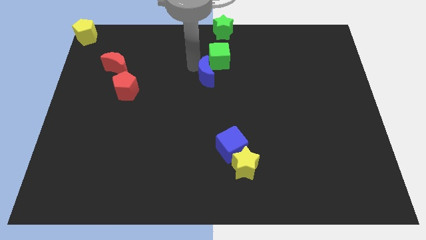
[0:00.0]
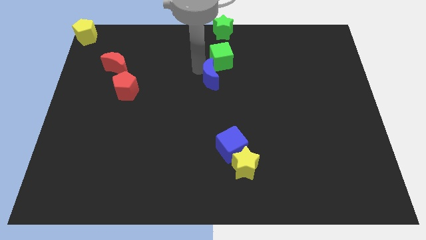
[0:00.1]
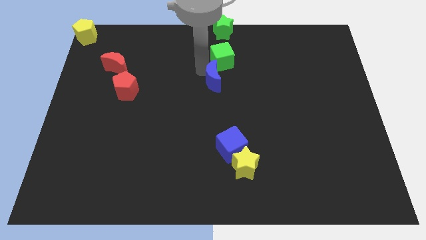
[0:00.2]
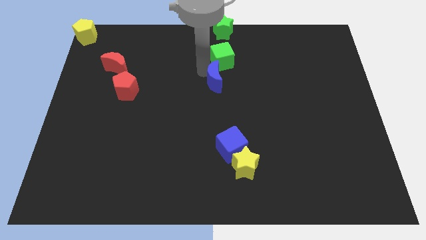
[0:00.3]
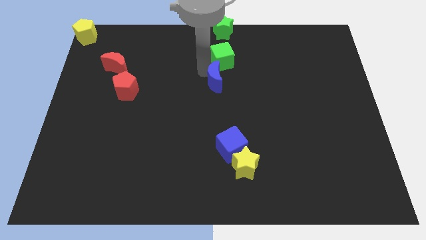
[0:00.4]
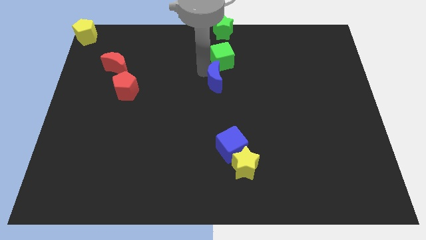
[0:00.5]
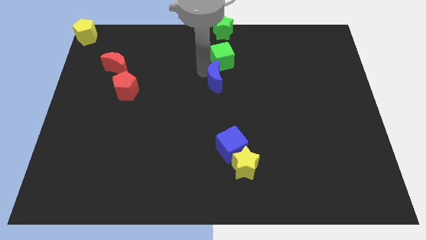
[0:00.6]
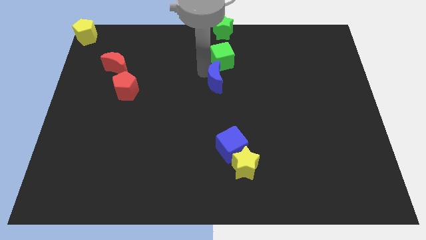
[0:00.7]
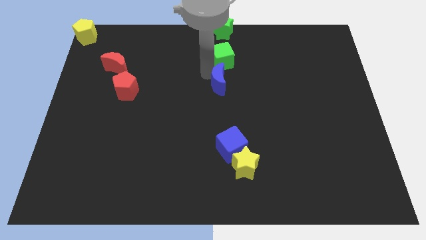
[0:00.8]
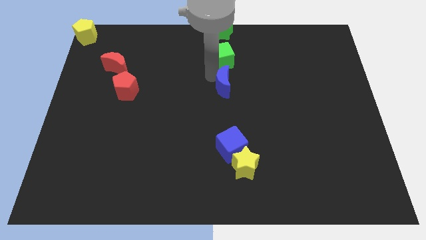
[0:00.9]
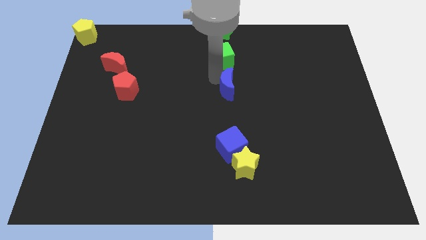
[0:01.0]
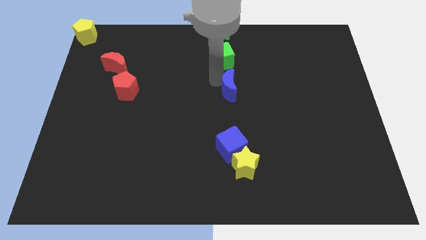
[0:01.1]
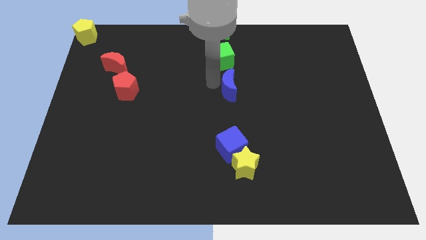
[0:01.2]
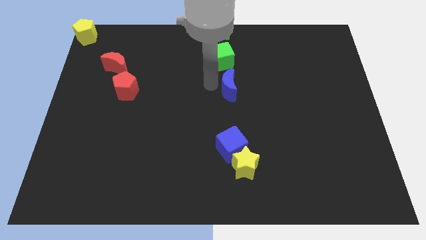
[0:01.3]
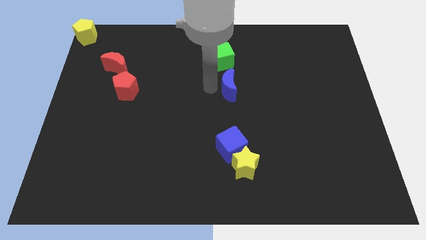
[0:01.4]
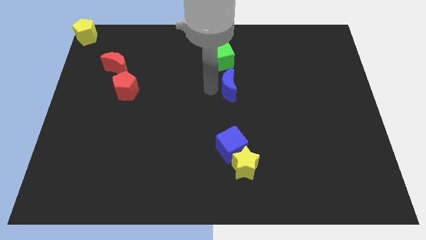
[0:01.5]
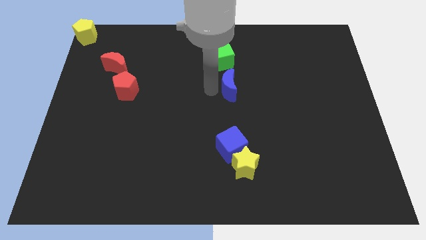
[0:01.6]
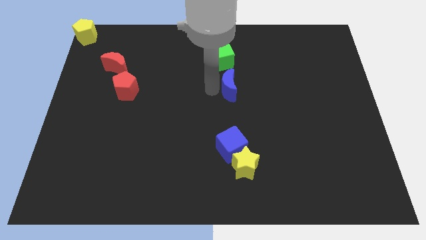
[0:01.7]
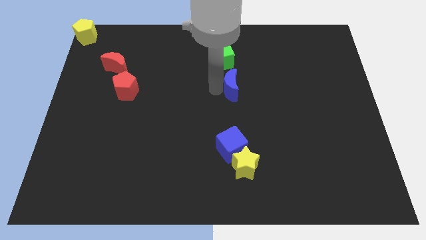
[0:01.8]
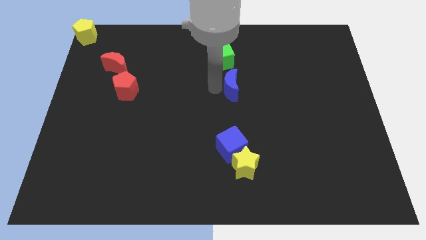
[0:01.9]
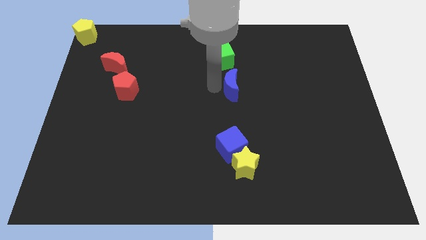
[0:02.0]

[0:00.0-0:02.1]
place blue moon below green cube

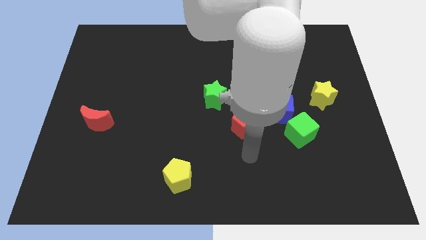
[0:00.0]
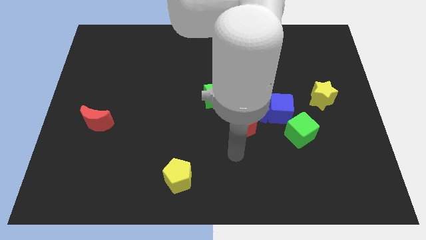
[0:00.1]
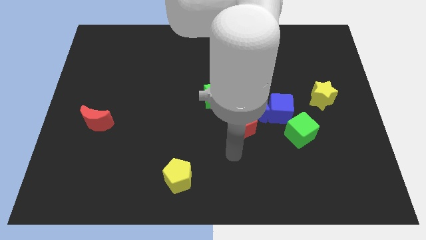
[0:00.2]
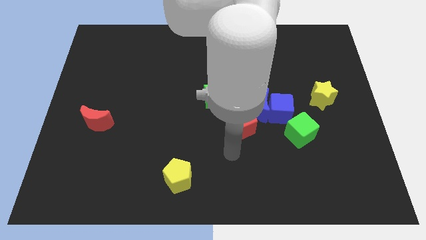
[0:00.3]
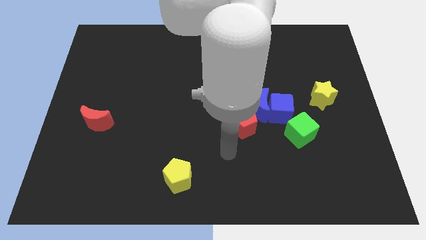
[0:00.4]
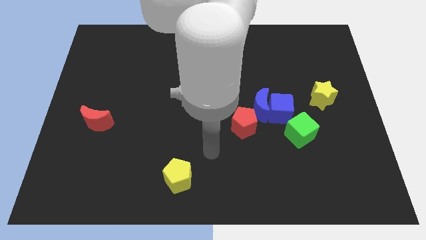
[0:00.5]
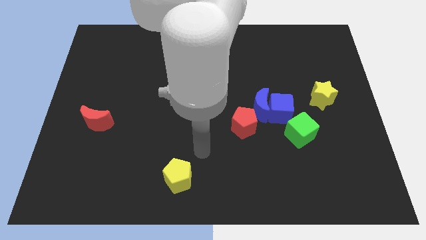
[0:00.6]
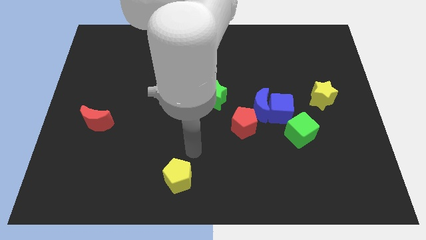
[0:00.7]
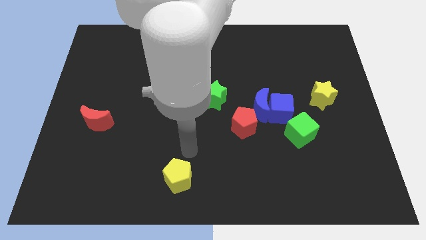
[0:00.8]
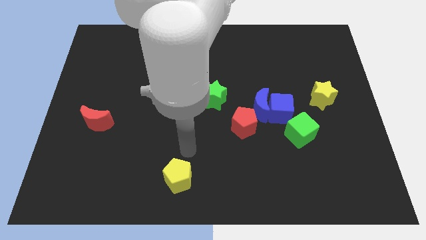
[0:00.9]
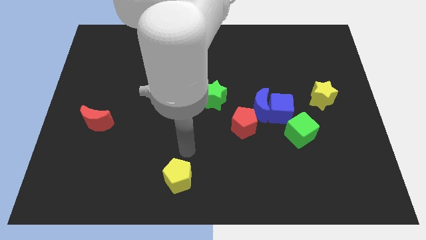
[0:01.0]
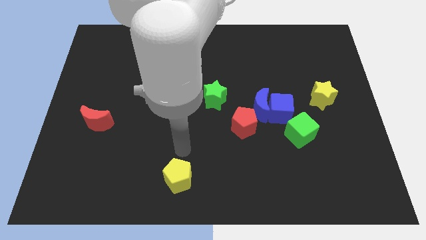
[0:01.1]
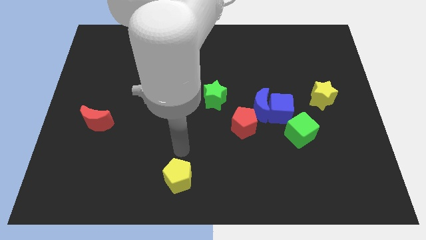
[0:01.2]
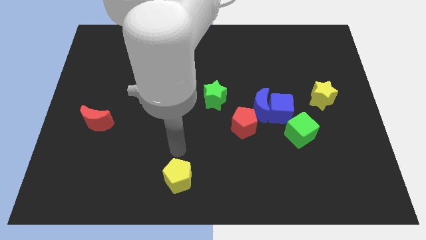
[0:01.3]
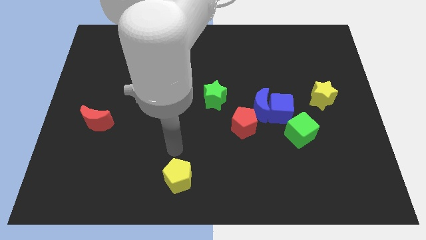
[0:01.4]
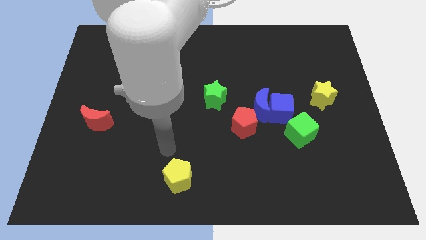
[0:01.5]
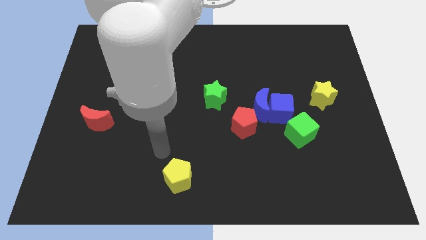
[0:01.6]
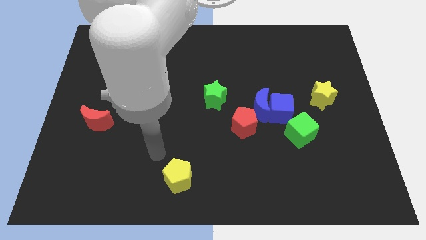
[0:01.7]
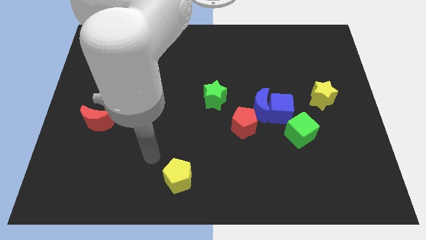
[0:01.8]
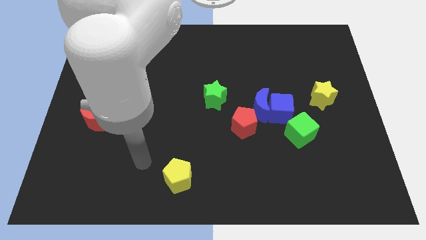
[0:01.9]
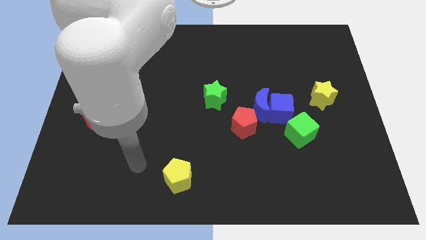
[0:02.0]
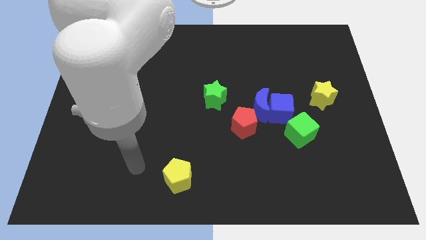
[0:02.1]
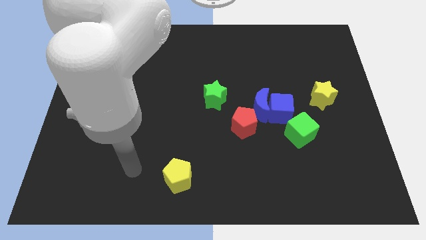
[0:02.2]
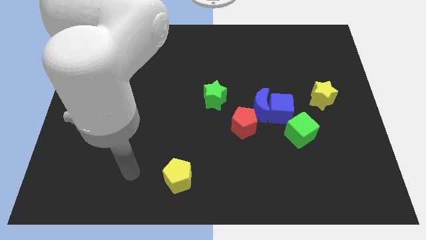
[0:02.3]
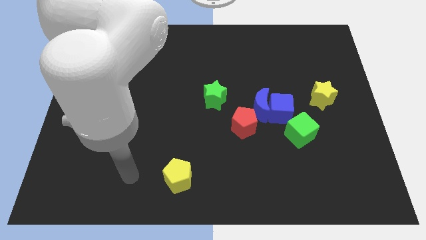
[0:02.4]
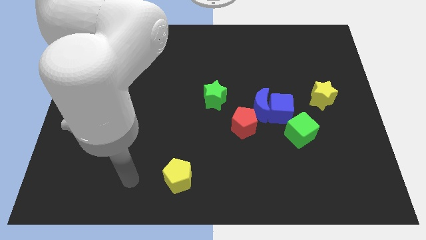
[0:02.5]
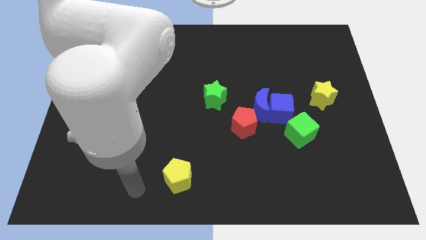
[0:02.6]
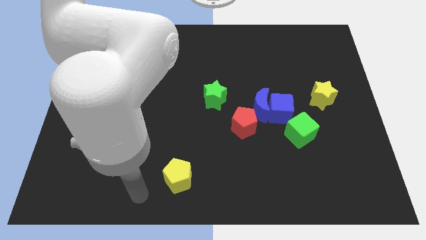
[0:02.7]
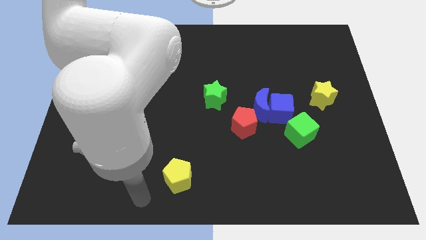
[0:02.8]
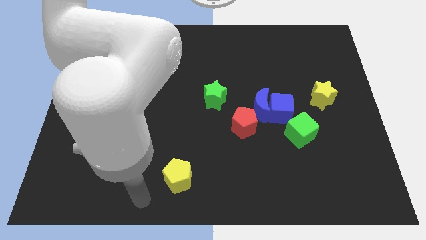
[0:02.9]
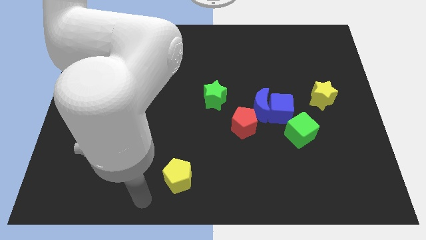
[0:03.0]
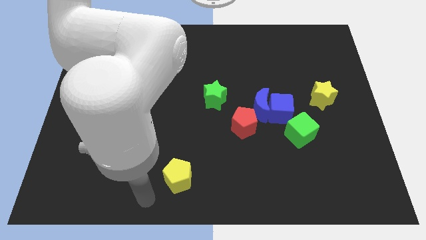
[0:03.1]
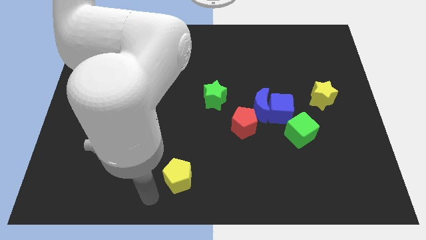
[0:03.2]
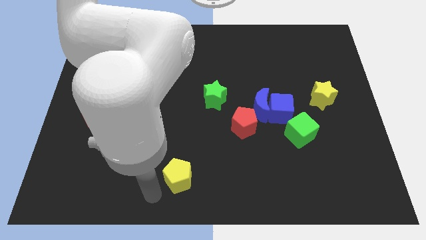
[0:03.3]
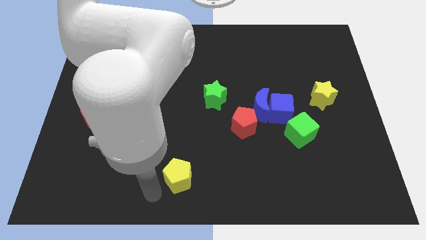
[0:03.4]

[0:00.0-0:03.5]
move your arm towards the yellow pentagon

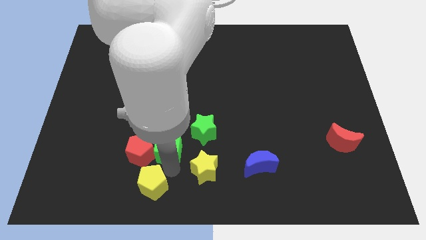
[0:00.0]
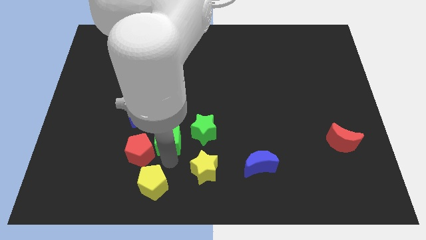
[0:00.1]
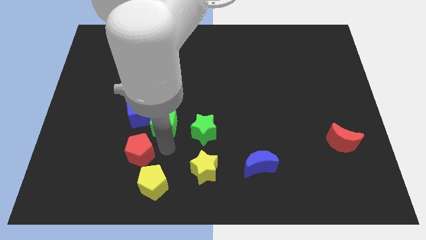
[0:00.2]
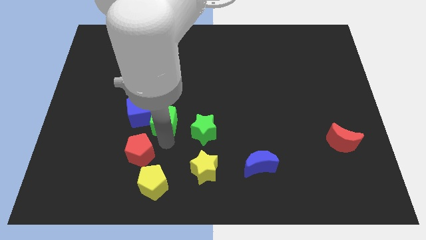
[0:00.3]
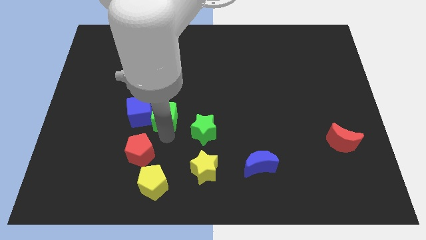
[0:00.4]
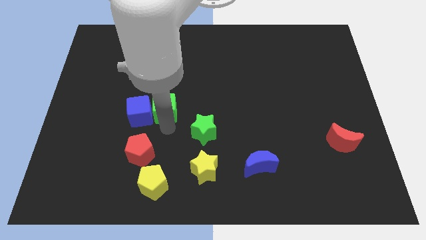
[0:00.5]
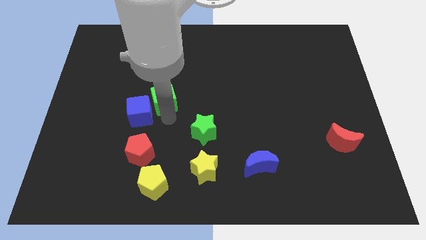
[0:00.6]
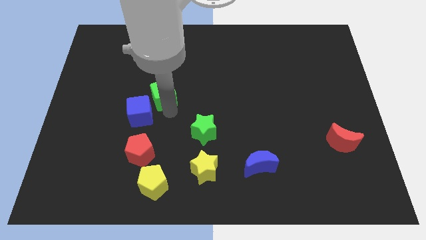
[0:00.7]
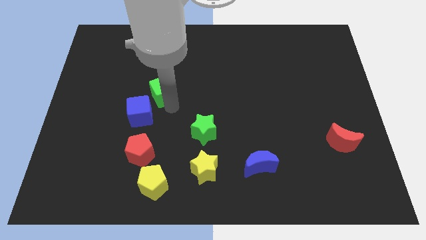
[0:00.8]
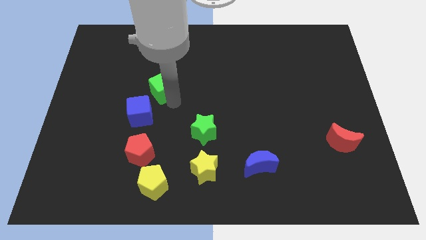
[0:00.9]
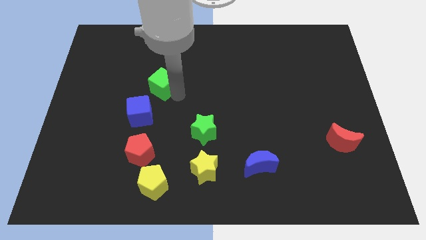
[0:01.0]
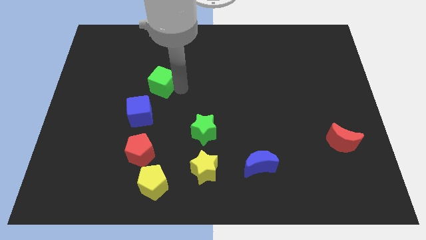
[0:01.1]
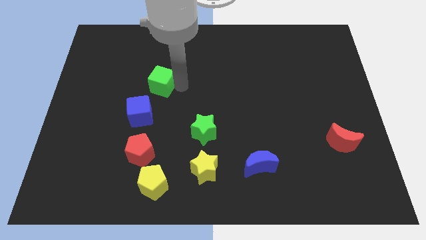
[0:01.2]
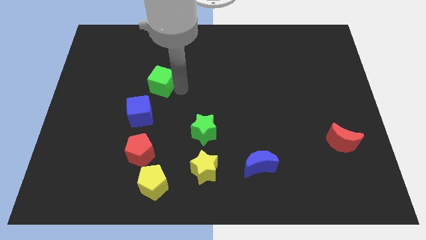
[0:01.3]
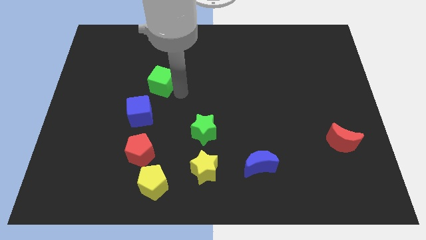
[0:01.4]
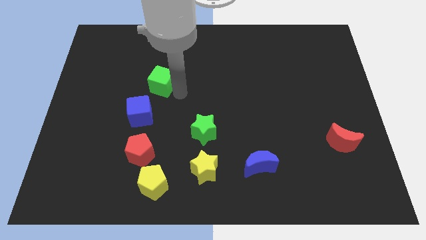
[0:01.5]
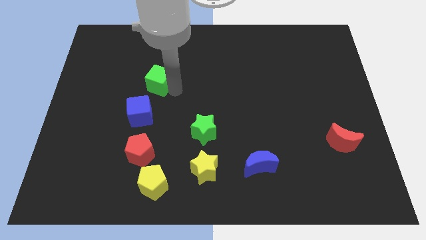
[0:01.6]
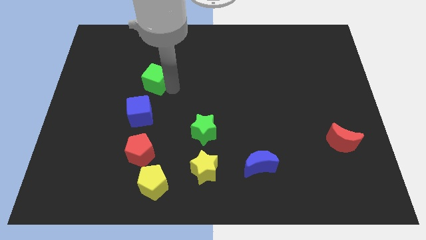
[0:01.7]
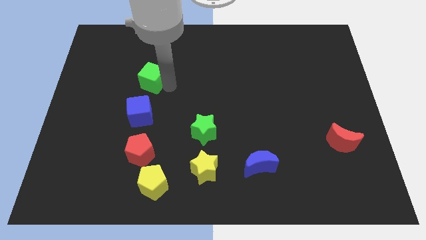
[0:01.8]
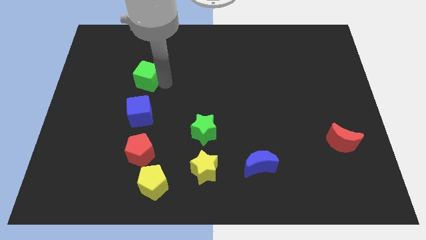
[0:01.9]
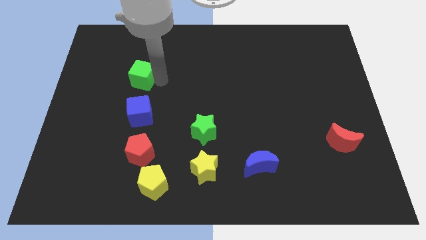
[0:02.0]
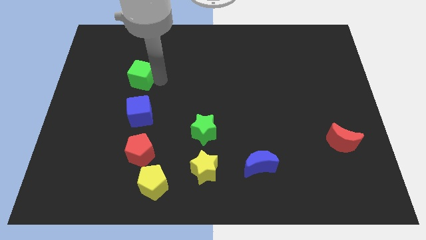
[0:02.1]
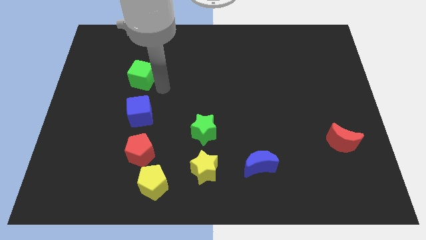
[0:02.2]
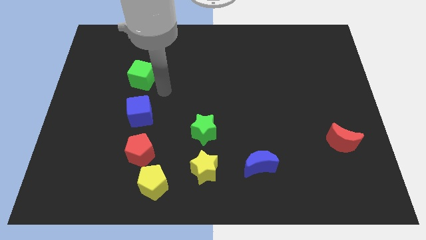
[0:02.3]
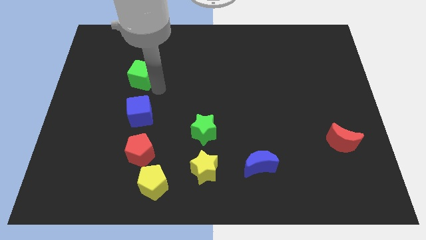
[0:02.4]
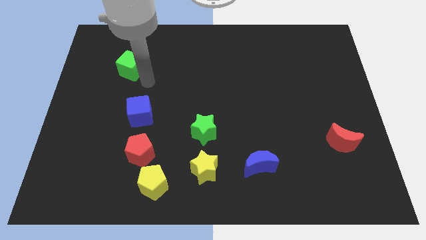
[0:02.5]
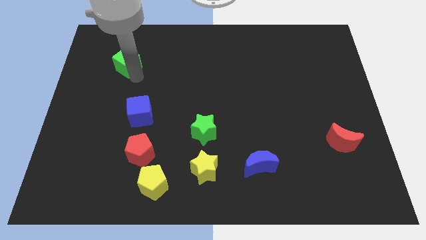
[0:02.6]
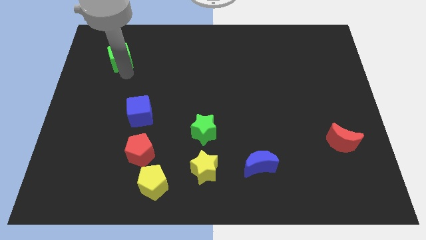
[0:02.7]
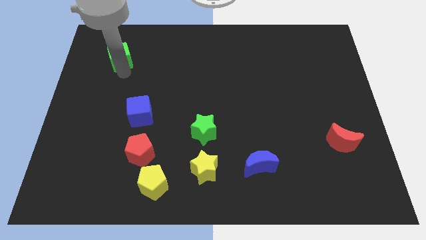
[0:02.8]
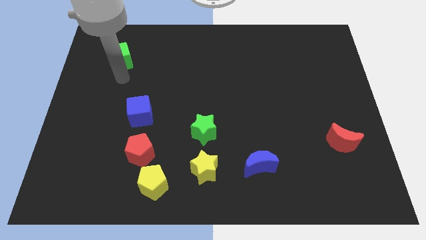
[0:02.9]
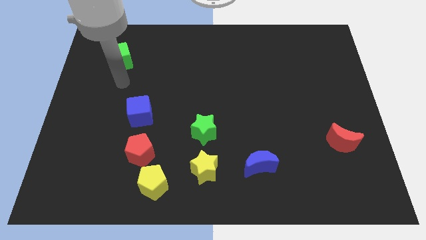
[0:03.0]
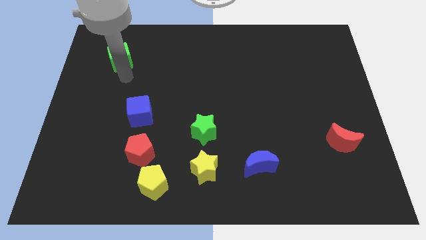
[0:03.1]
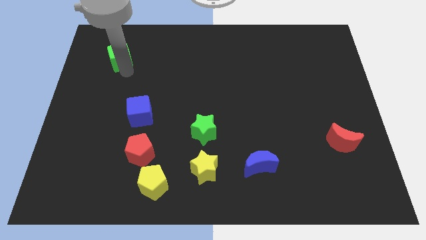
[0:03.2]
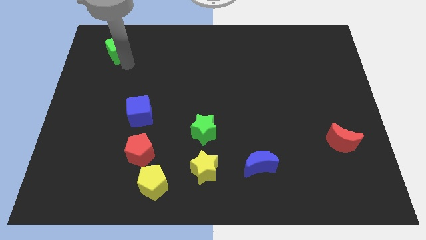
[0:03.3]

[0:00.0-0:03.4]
move the green cube diagonally top left to the blue cube
